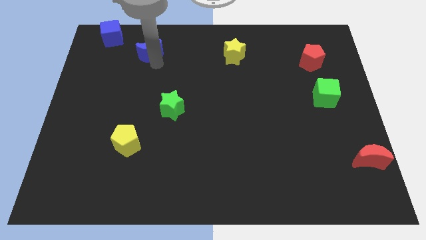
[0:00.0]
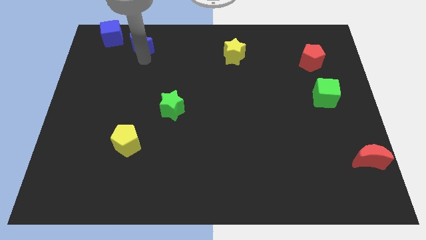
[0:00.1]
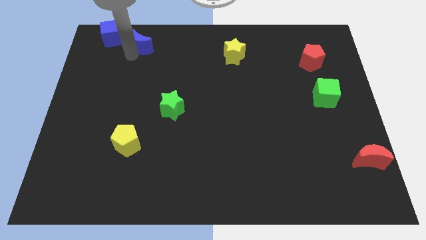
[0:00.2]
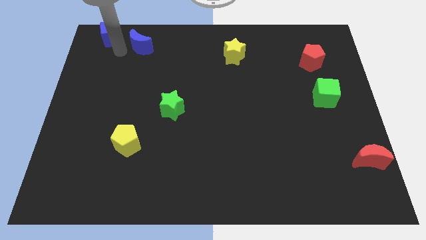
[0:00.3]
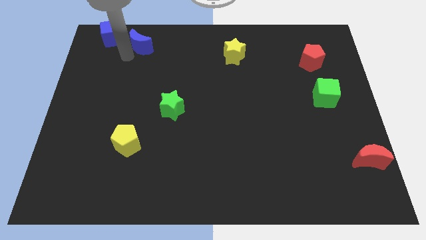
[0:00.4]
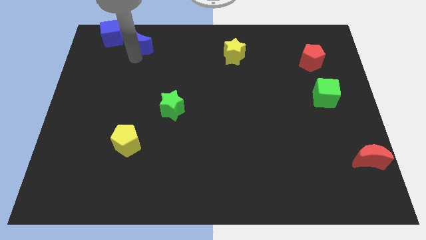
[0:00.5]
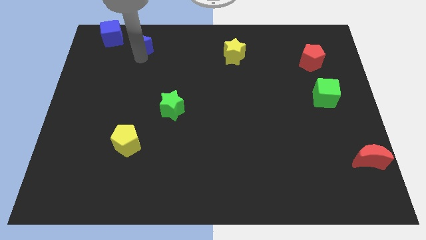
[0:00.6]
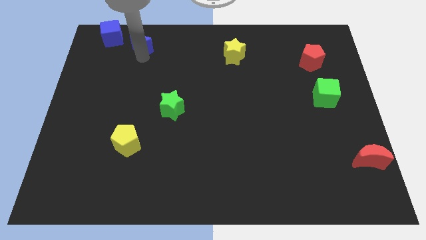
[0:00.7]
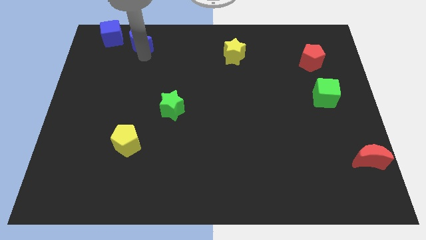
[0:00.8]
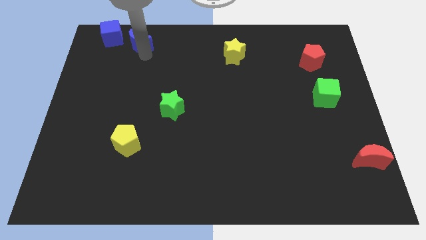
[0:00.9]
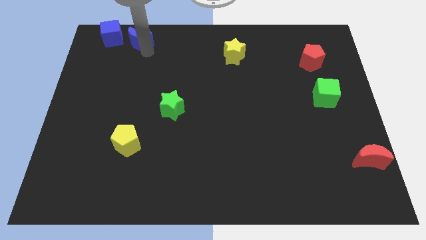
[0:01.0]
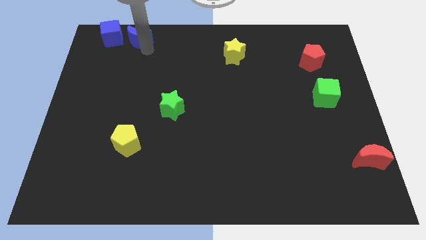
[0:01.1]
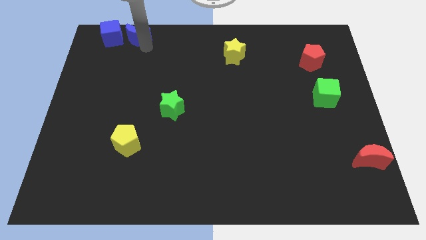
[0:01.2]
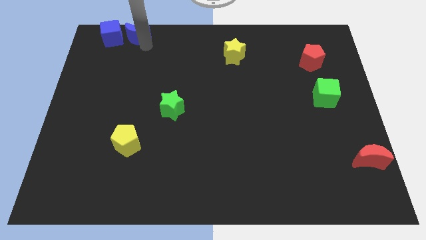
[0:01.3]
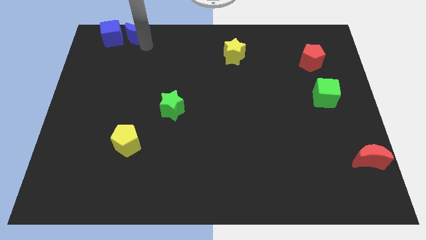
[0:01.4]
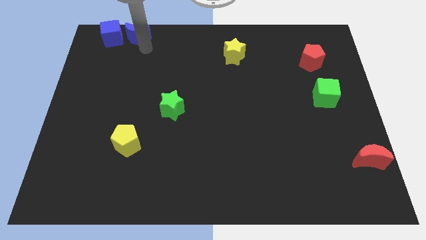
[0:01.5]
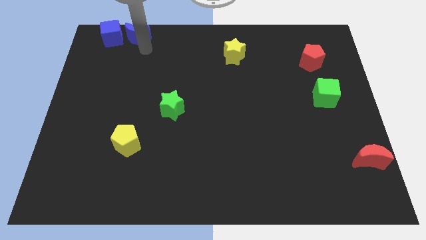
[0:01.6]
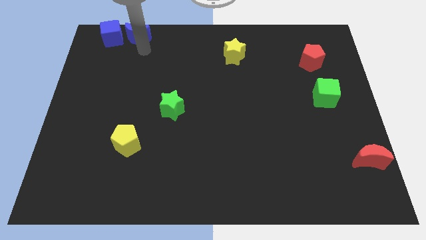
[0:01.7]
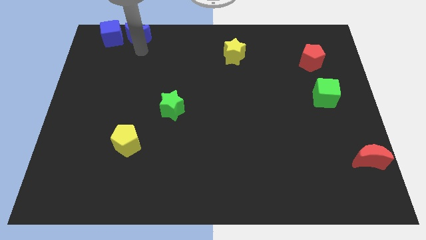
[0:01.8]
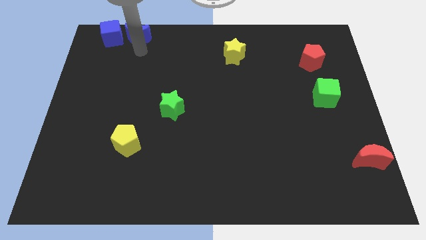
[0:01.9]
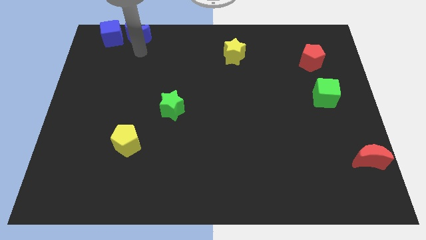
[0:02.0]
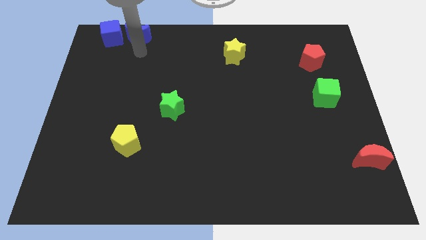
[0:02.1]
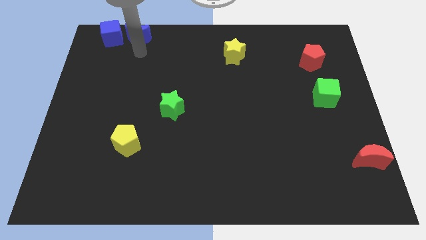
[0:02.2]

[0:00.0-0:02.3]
place blue crescent on the right side of the blue cube

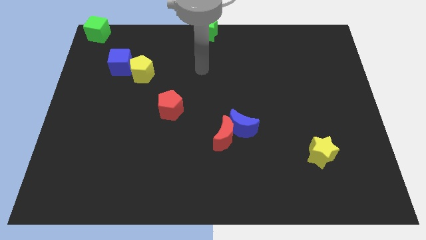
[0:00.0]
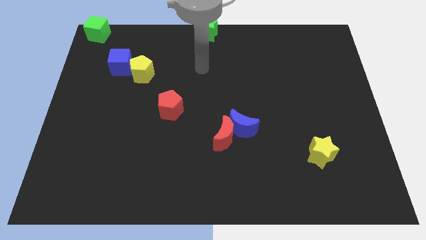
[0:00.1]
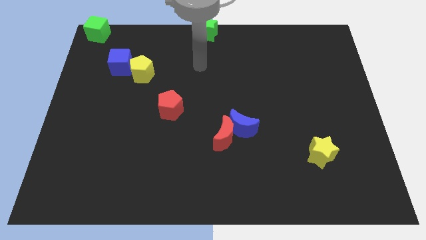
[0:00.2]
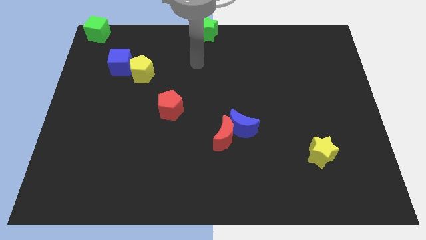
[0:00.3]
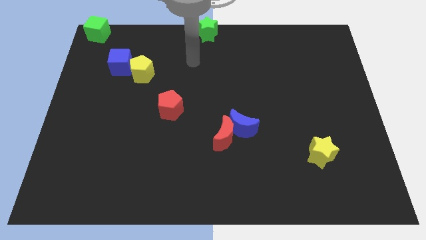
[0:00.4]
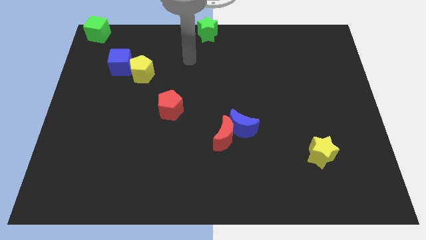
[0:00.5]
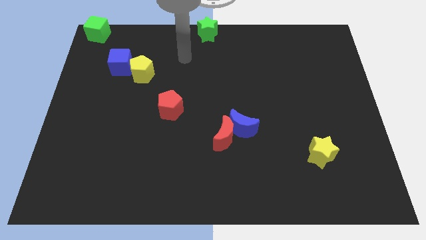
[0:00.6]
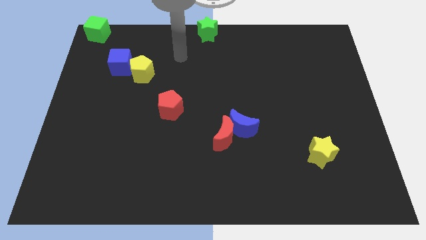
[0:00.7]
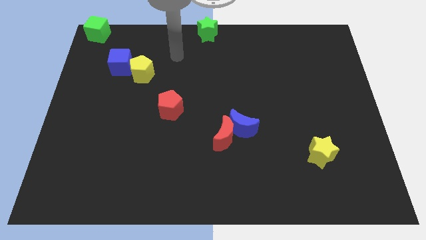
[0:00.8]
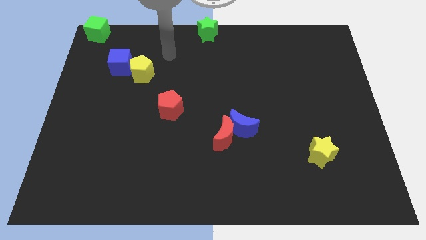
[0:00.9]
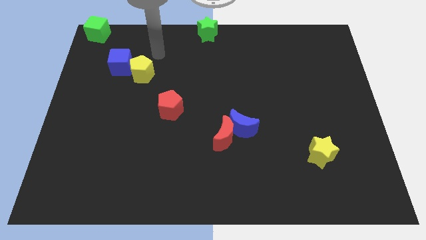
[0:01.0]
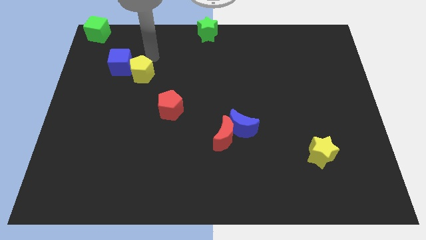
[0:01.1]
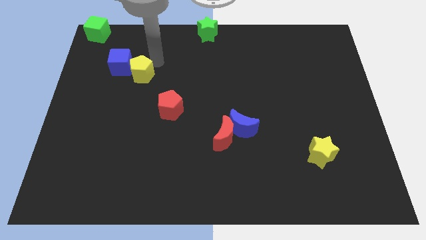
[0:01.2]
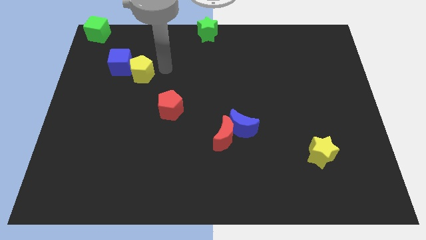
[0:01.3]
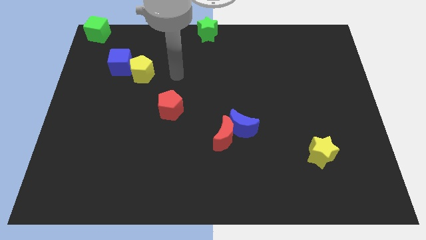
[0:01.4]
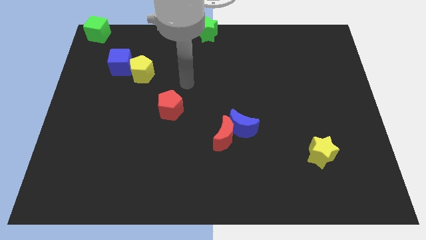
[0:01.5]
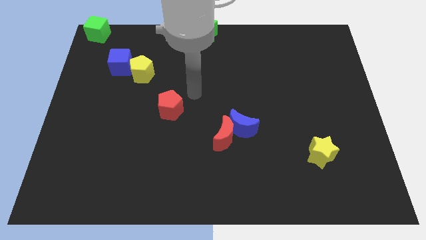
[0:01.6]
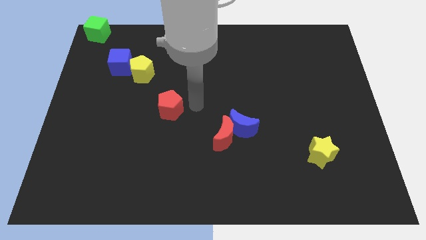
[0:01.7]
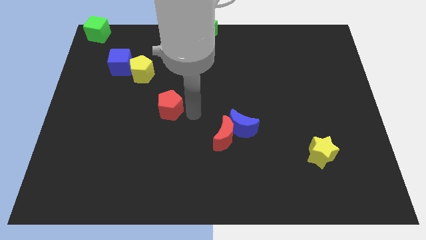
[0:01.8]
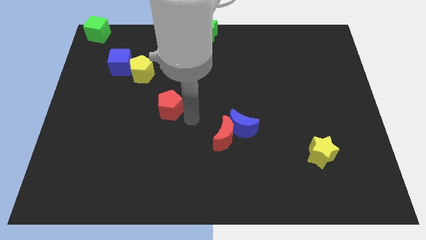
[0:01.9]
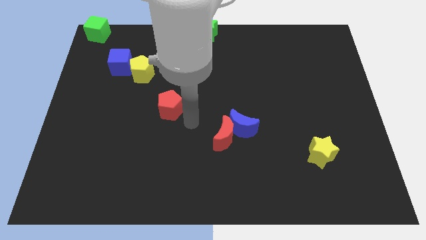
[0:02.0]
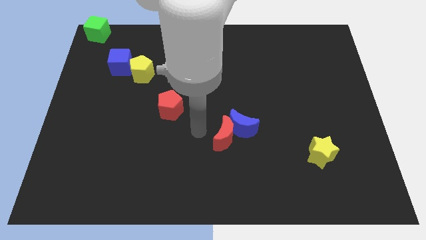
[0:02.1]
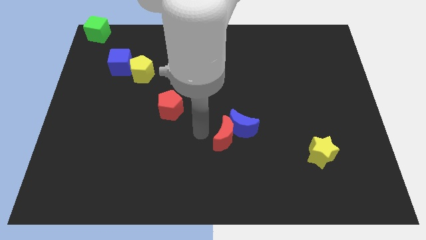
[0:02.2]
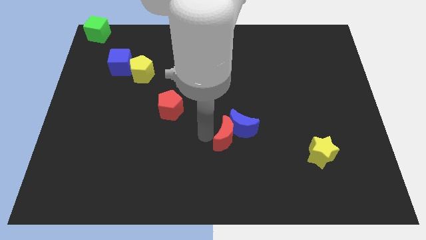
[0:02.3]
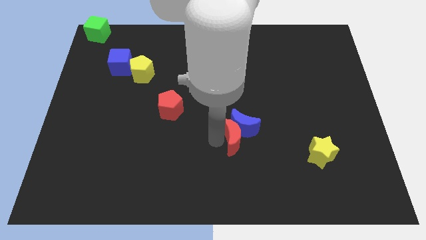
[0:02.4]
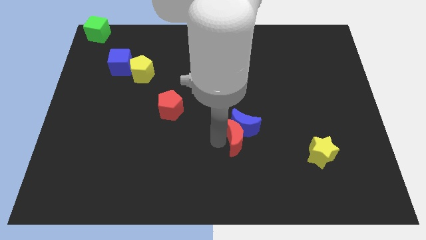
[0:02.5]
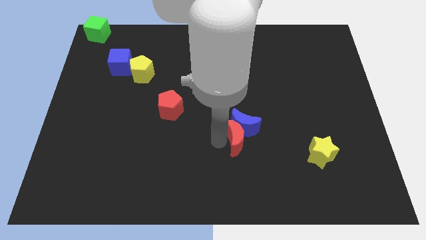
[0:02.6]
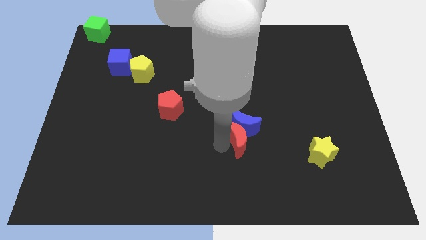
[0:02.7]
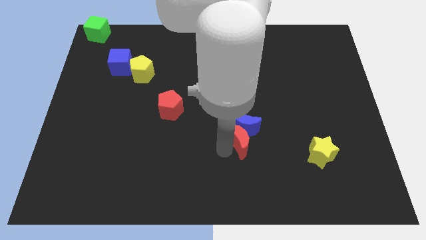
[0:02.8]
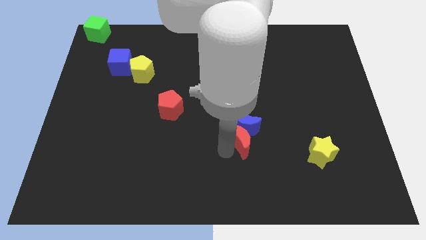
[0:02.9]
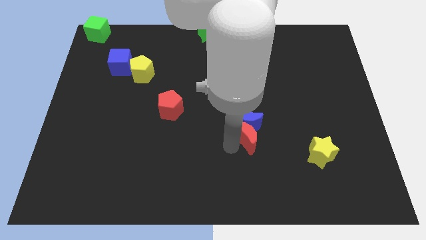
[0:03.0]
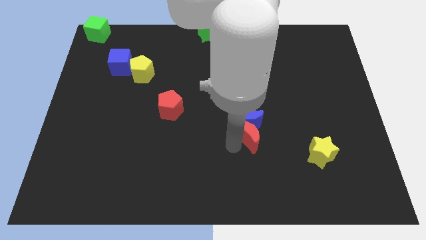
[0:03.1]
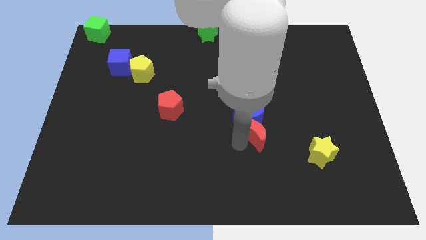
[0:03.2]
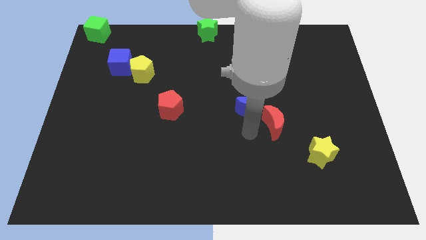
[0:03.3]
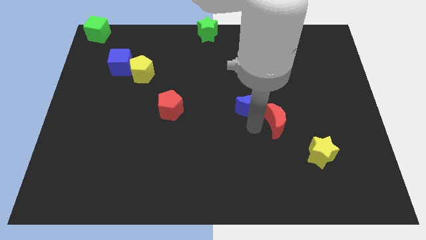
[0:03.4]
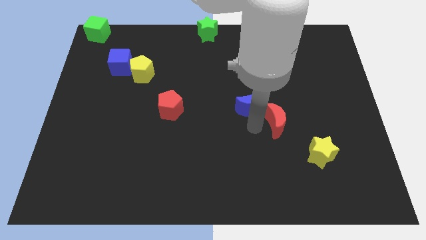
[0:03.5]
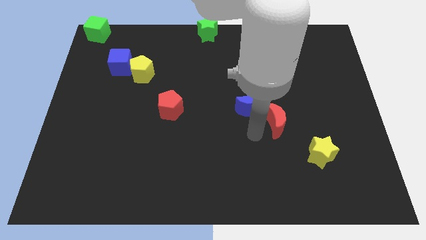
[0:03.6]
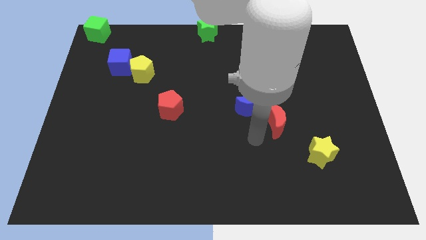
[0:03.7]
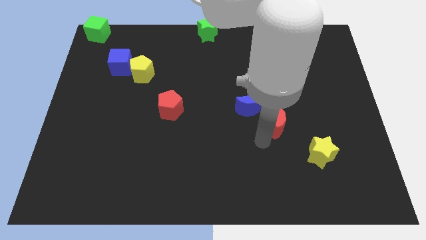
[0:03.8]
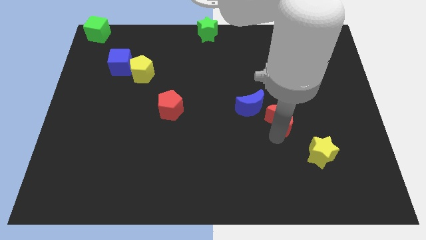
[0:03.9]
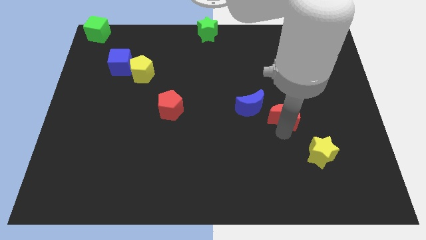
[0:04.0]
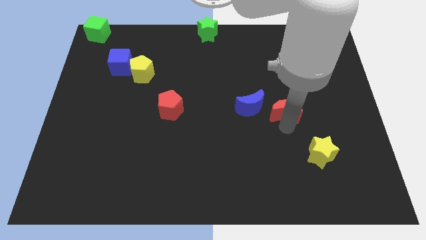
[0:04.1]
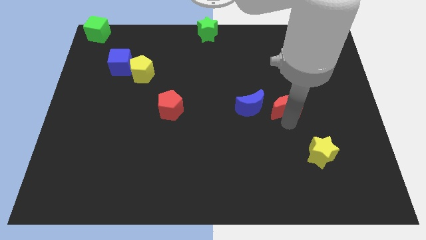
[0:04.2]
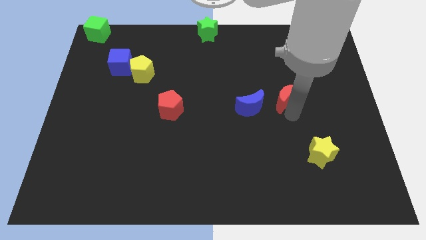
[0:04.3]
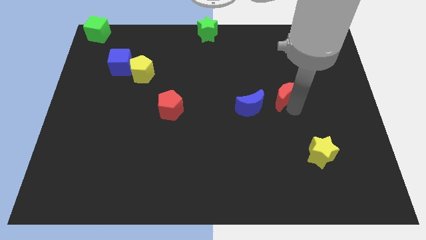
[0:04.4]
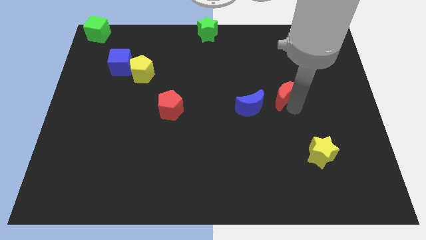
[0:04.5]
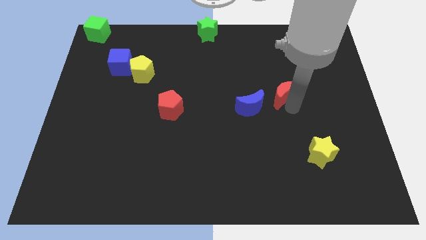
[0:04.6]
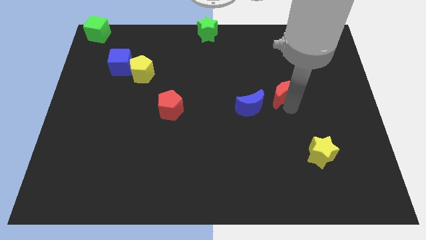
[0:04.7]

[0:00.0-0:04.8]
place red crescent beside blue crescent

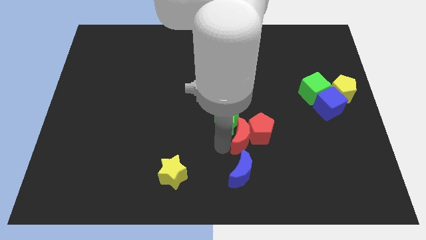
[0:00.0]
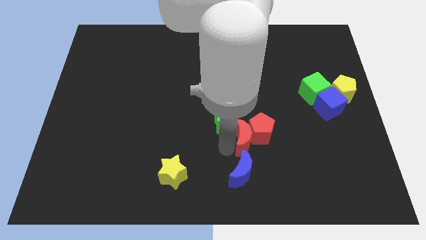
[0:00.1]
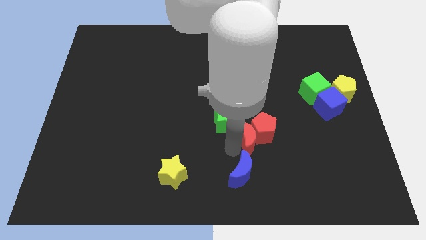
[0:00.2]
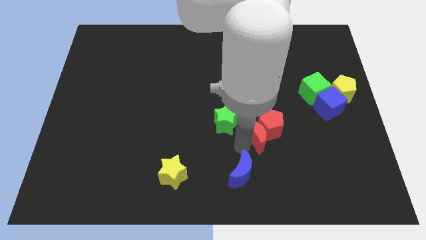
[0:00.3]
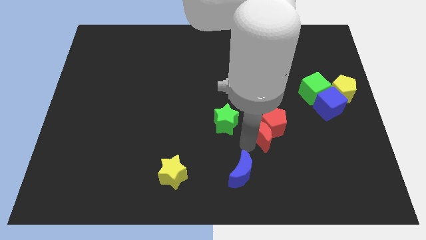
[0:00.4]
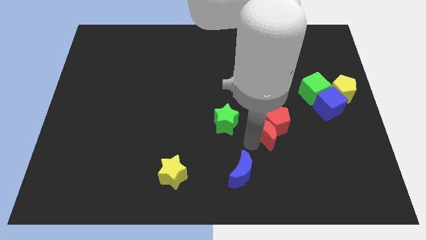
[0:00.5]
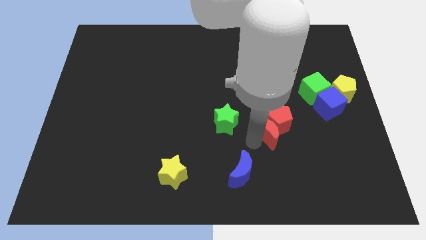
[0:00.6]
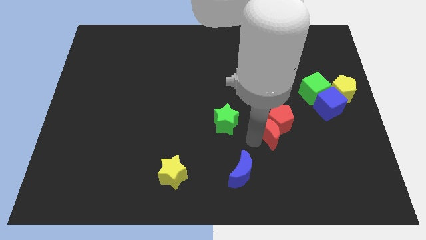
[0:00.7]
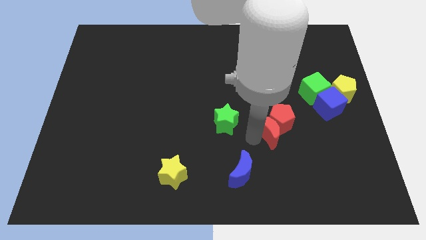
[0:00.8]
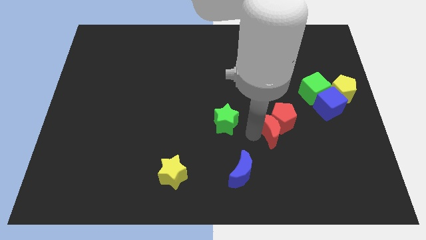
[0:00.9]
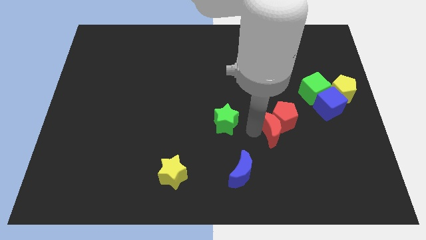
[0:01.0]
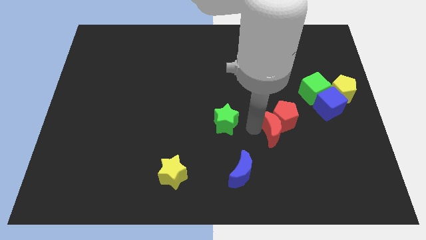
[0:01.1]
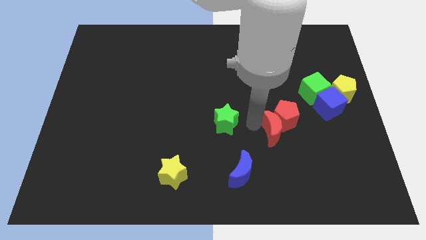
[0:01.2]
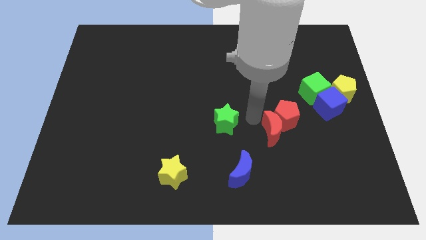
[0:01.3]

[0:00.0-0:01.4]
separate the group of red blocks from the green star

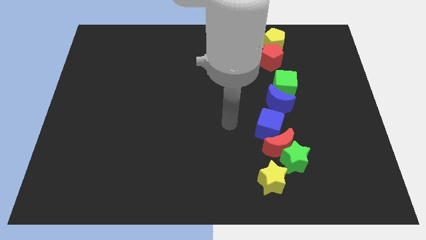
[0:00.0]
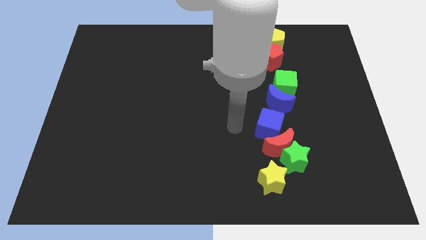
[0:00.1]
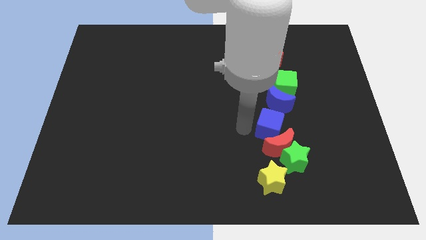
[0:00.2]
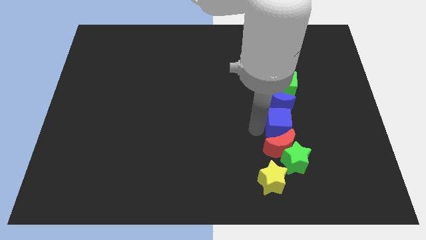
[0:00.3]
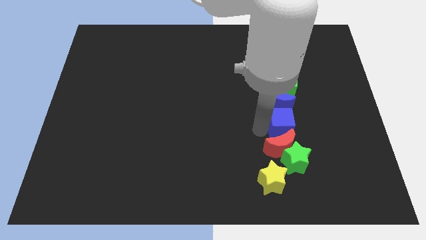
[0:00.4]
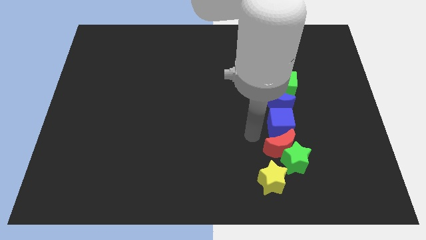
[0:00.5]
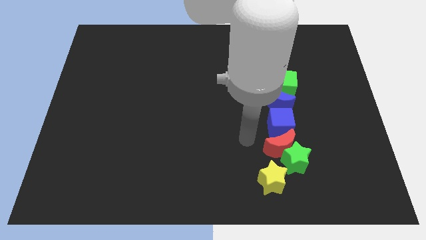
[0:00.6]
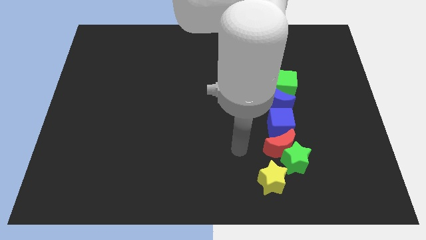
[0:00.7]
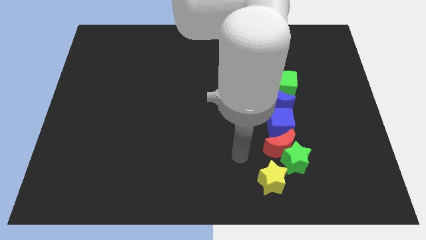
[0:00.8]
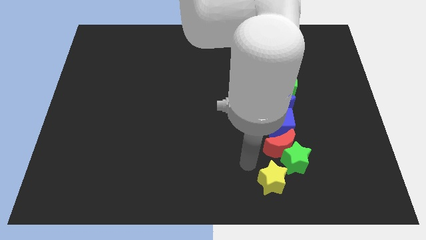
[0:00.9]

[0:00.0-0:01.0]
place the blue cube in between the blue moon and the red crescent
